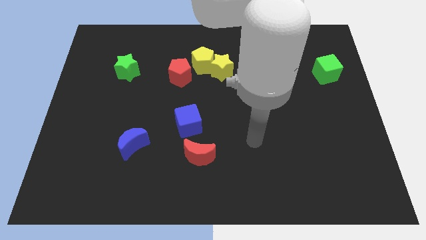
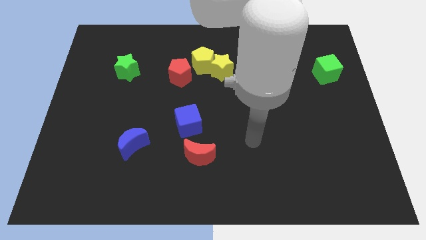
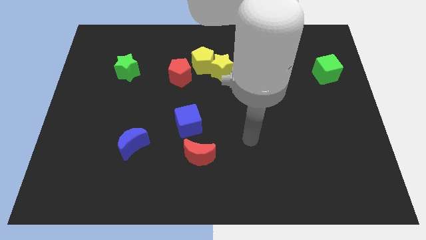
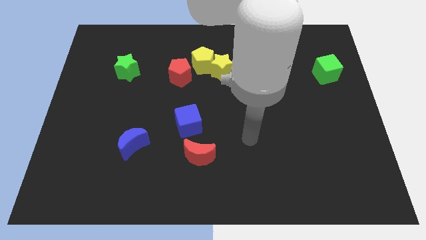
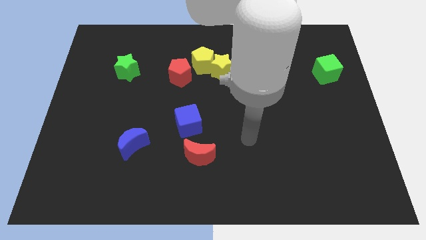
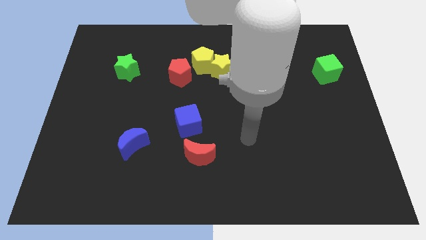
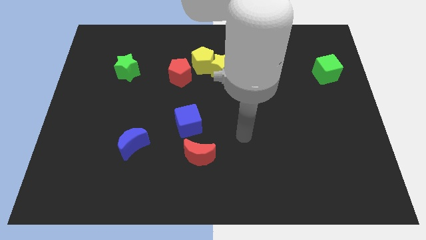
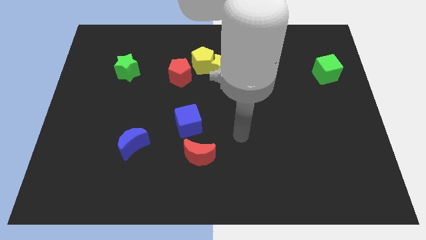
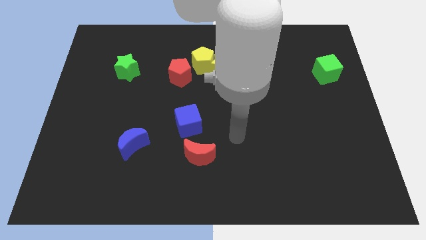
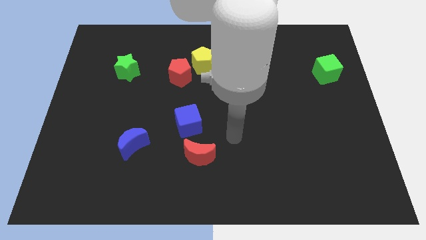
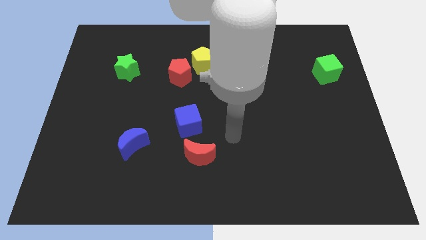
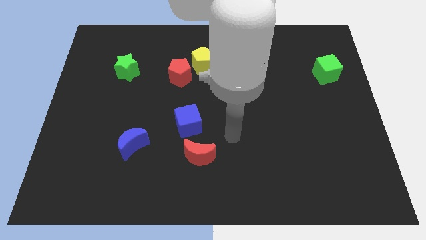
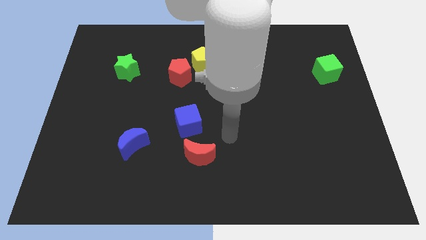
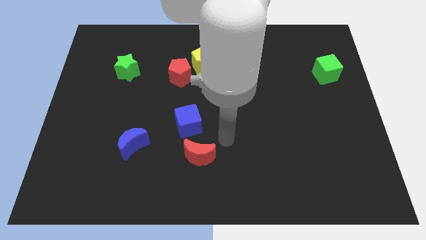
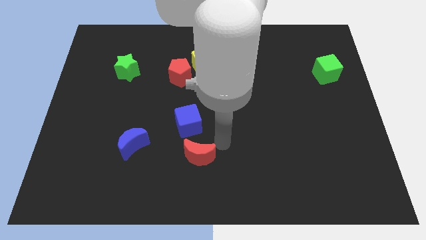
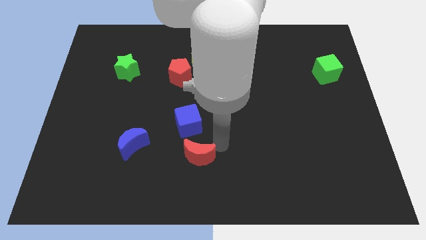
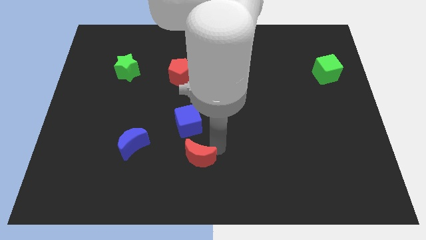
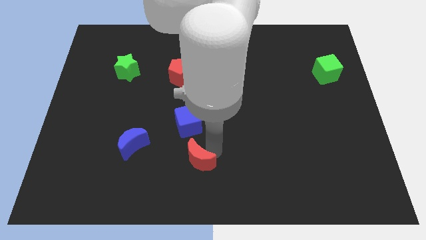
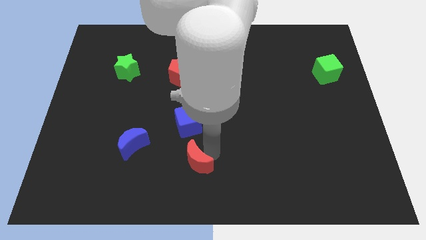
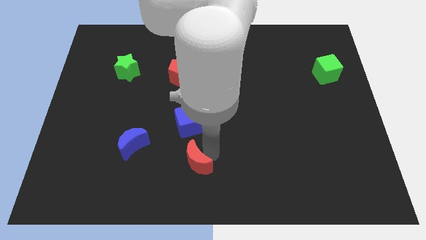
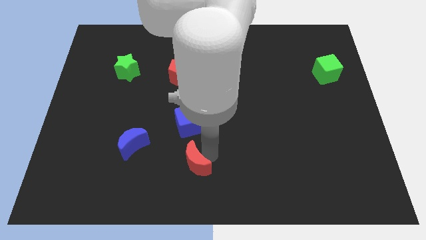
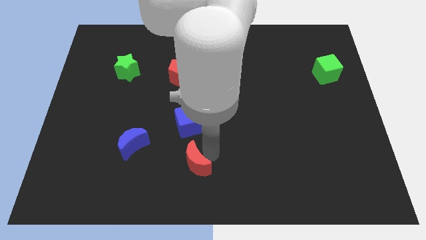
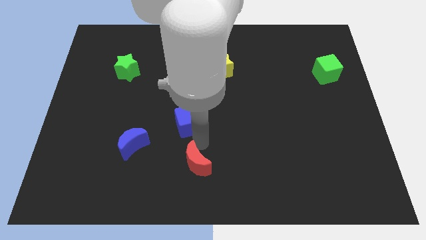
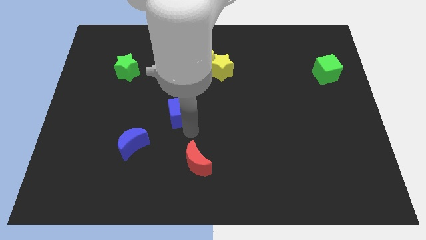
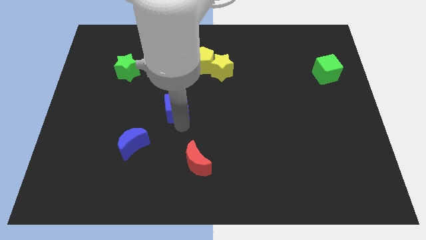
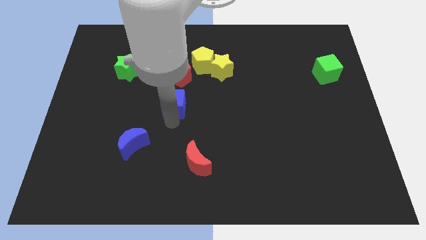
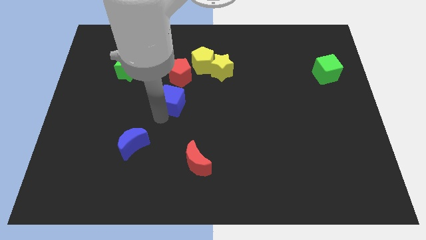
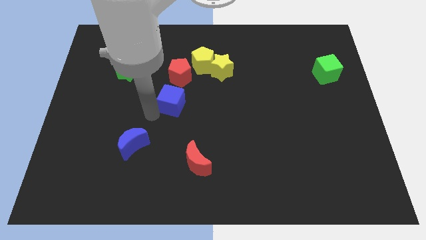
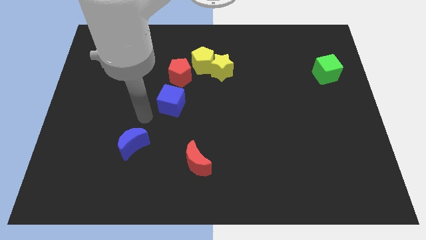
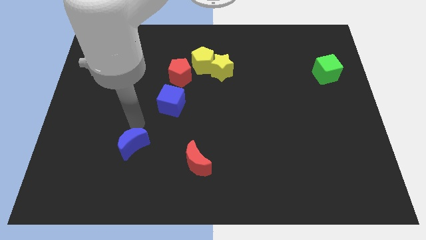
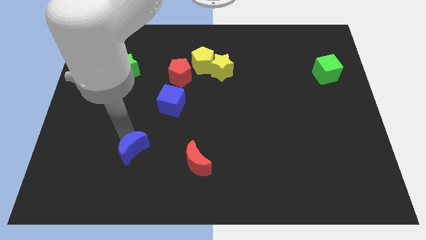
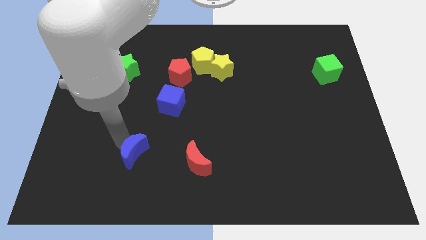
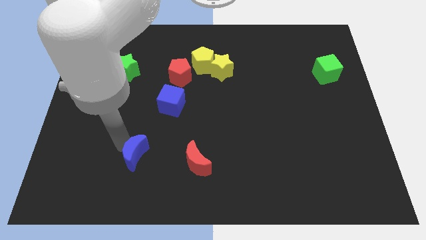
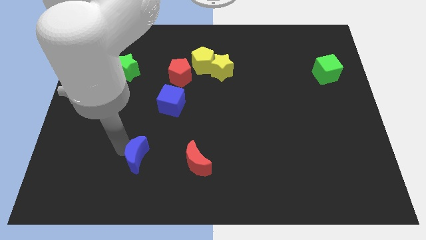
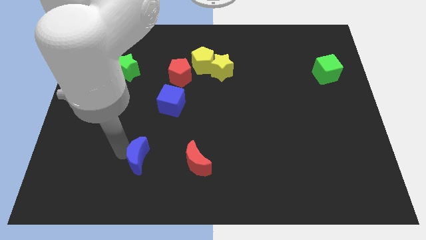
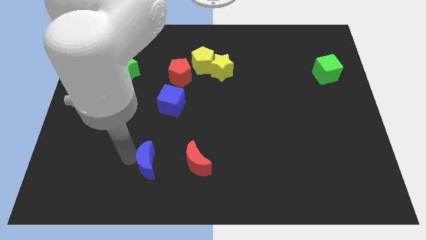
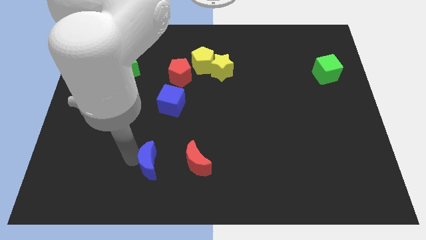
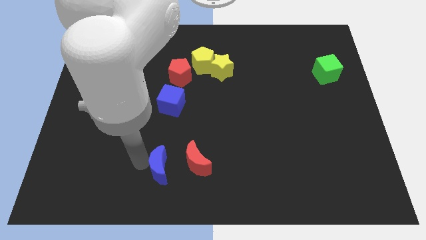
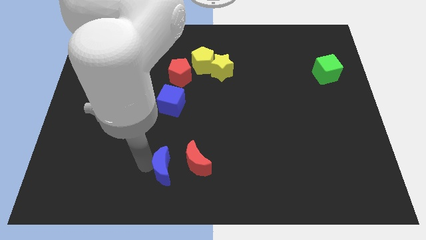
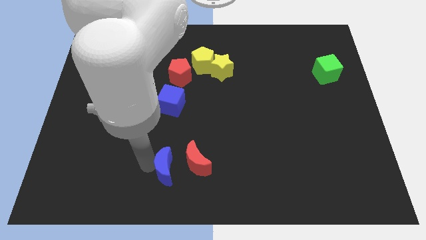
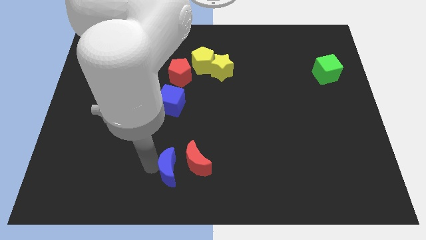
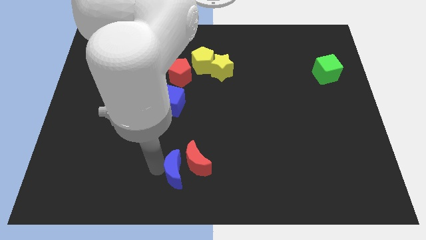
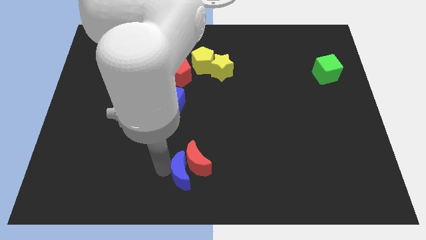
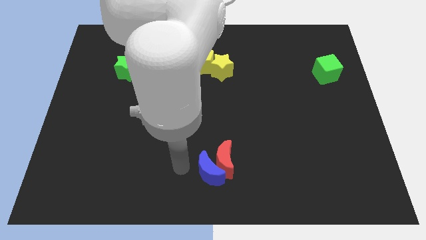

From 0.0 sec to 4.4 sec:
push the blue semicircle into the red crescent

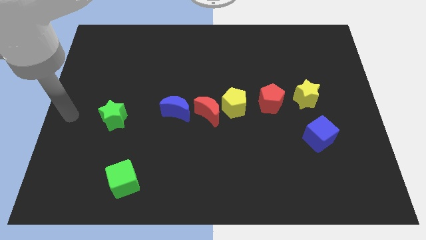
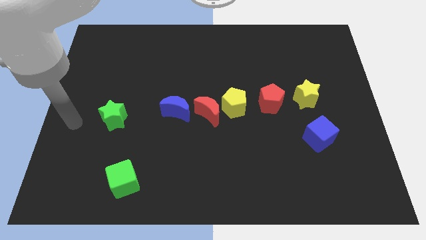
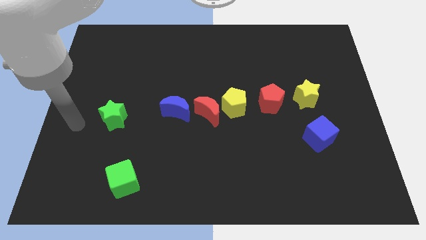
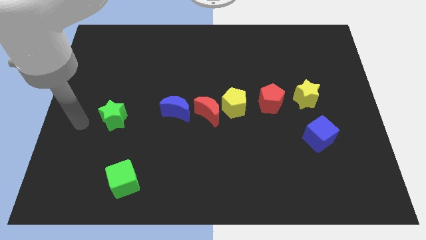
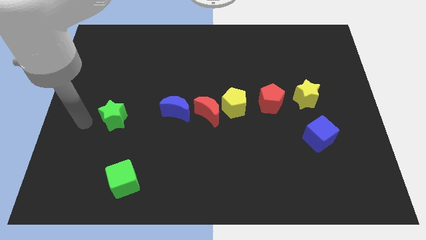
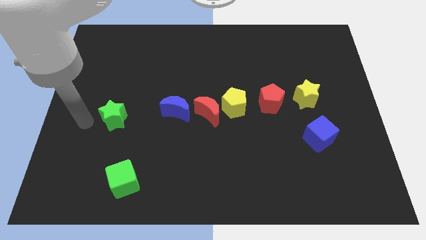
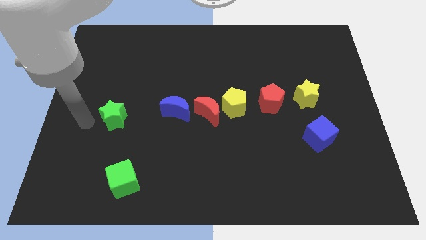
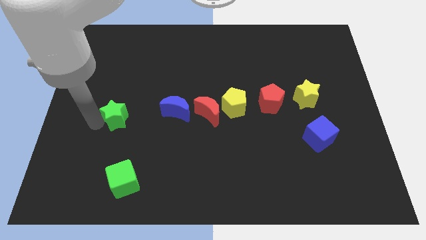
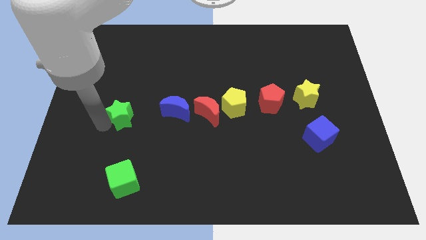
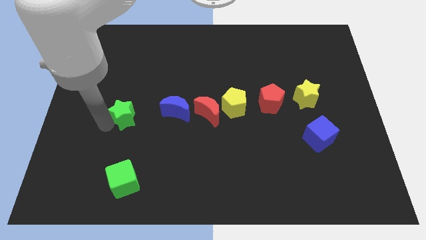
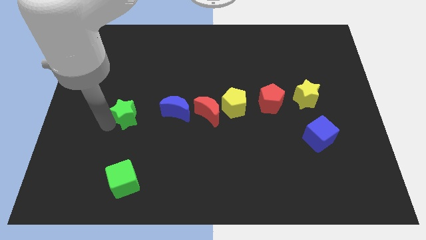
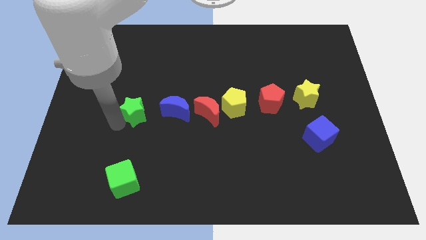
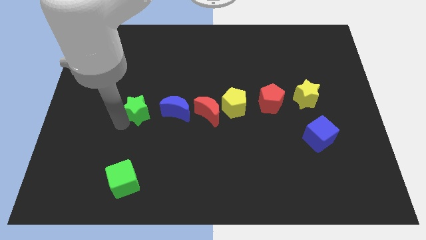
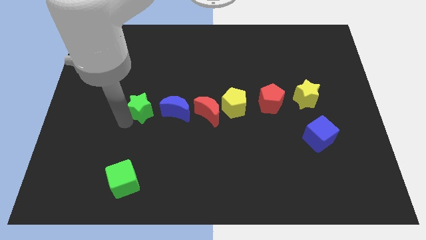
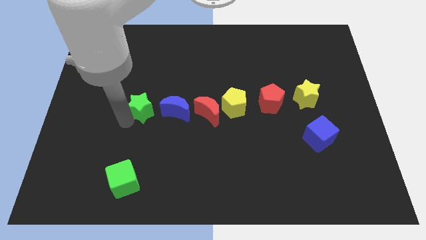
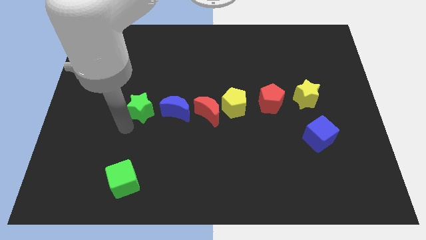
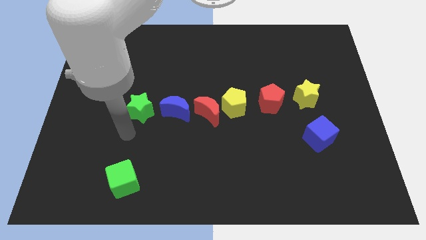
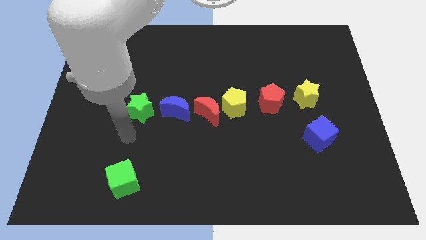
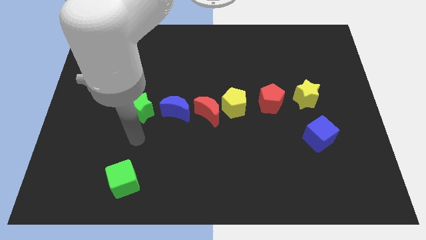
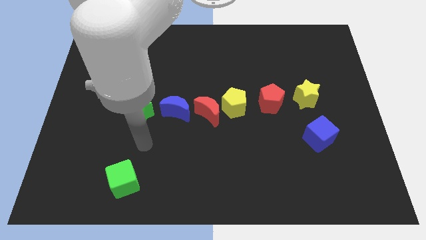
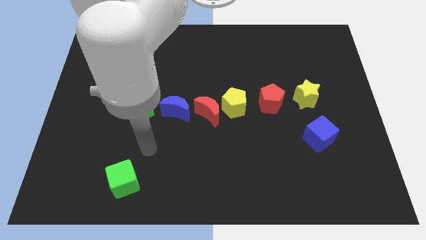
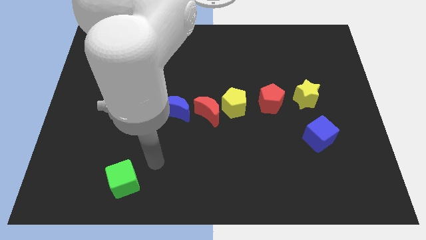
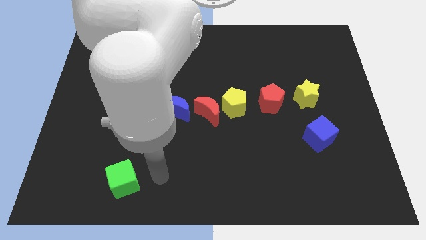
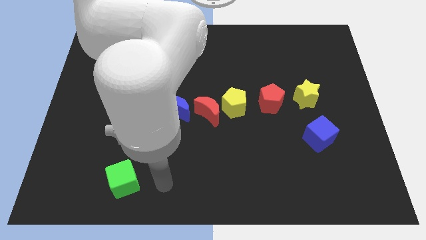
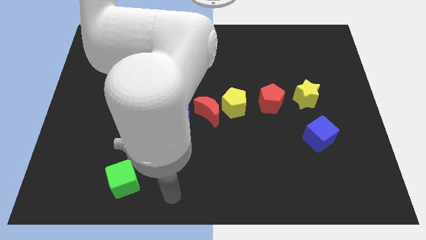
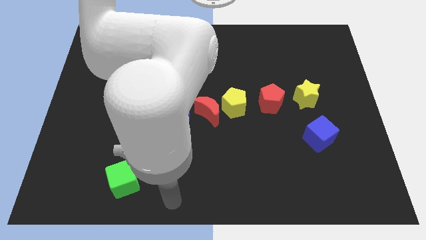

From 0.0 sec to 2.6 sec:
move the green star to the left of the blue moon

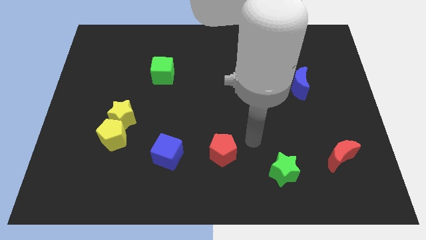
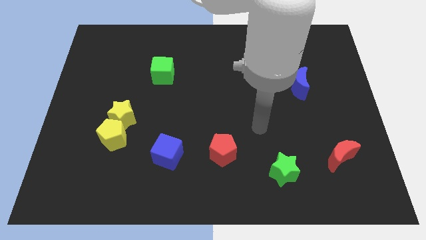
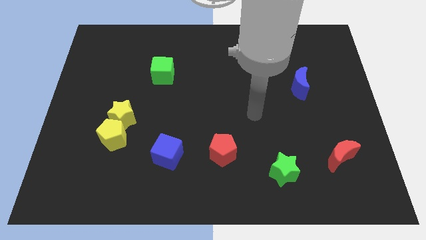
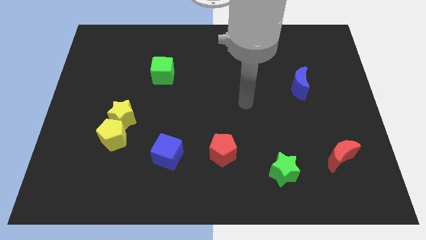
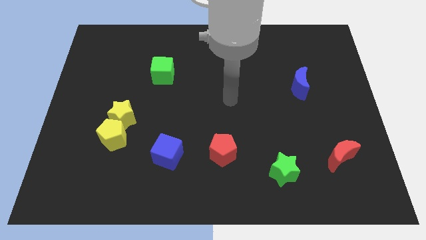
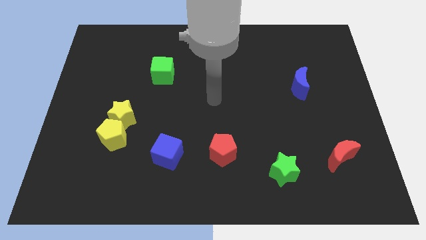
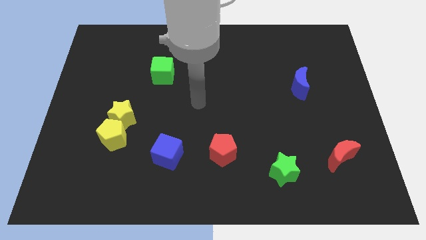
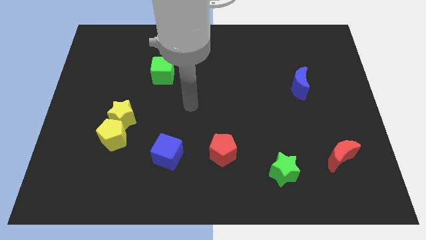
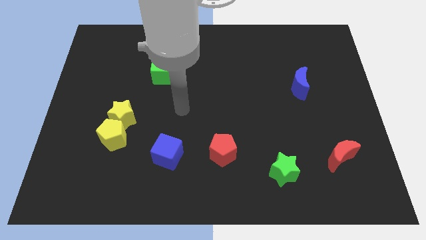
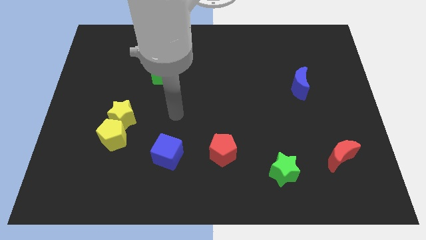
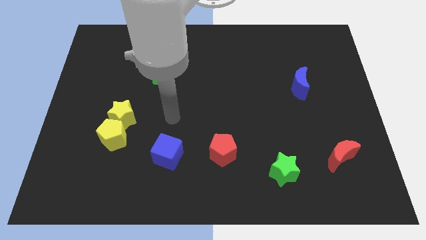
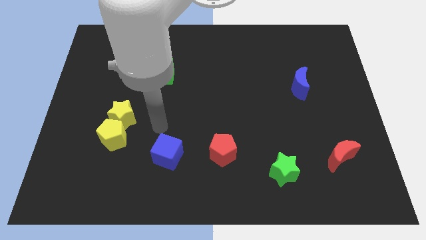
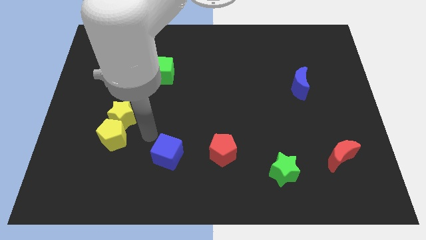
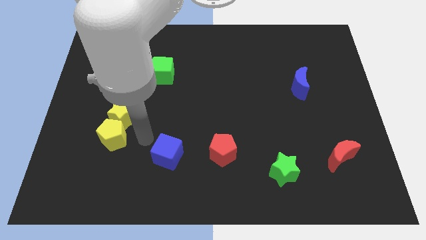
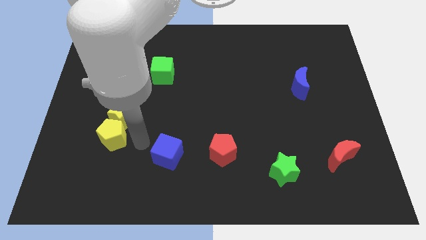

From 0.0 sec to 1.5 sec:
place your hand in between blue cube and yellow star

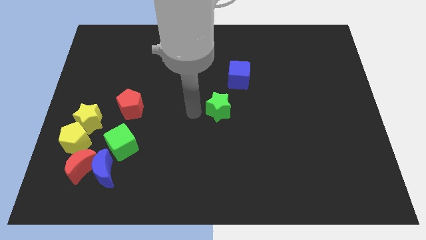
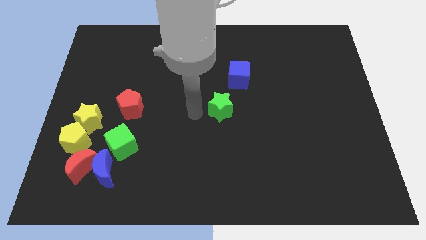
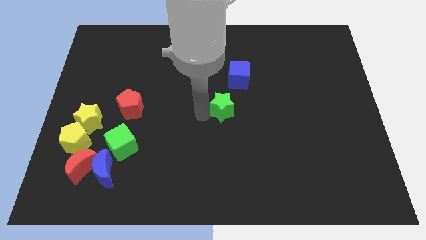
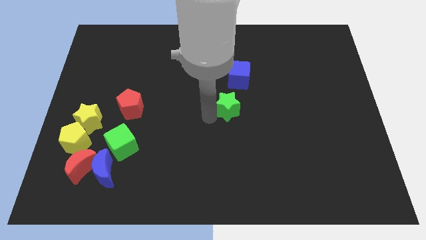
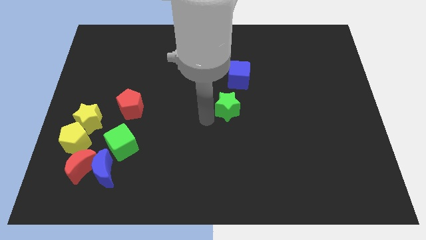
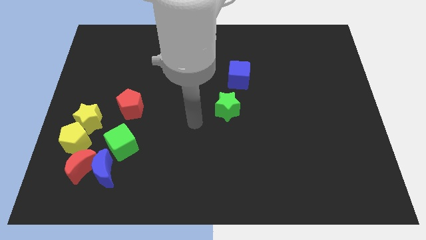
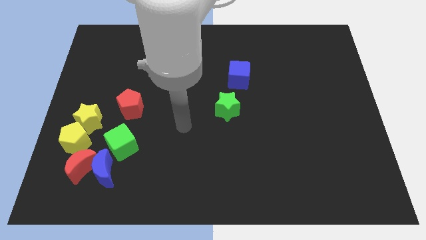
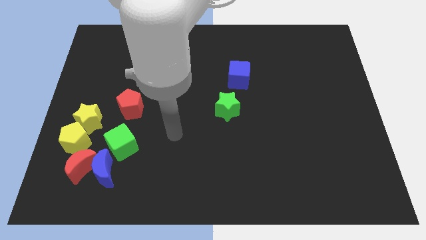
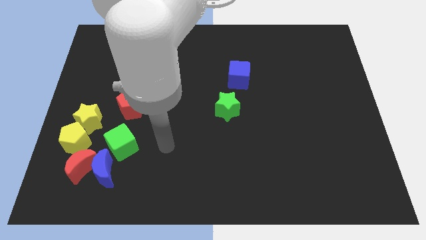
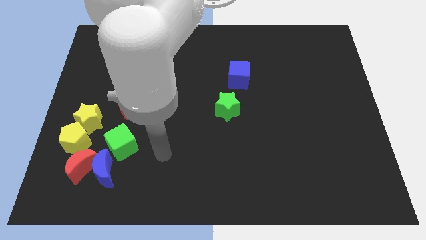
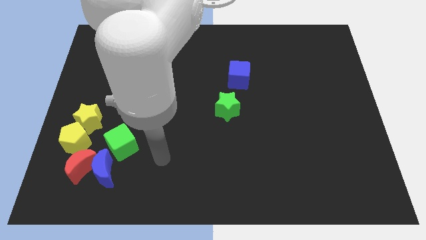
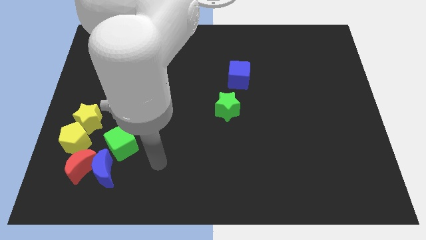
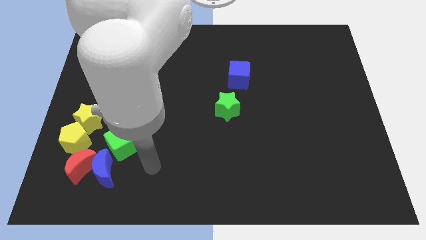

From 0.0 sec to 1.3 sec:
place the green star towards the bottom left side of the blue cube
